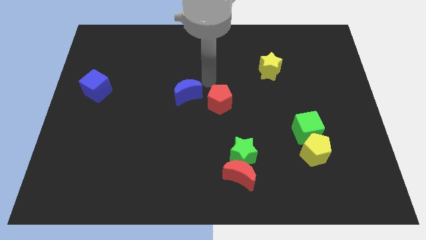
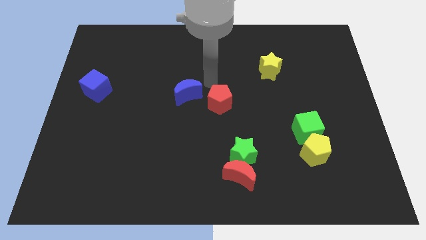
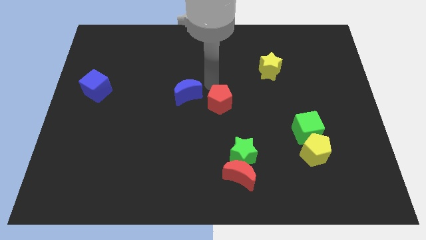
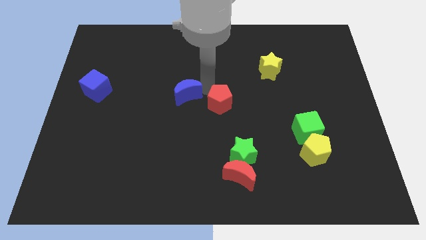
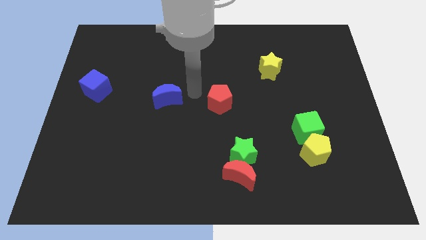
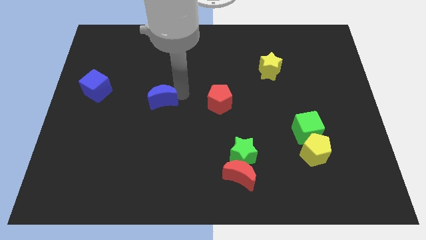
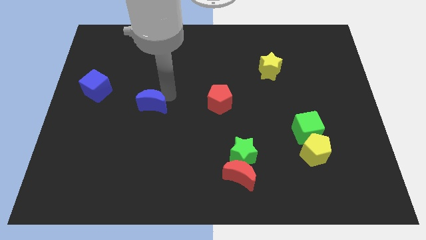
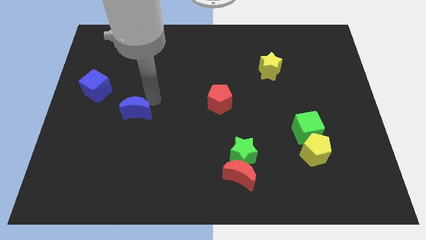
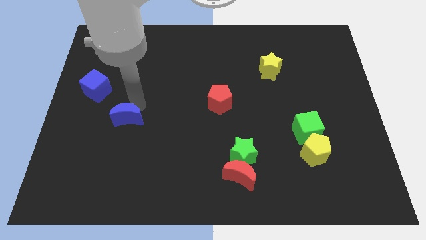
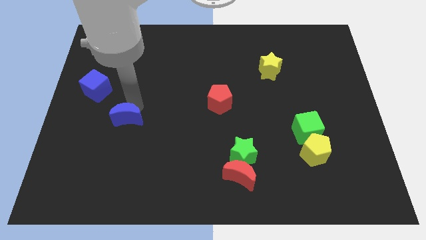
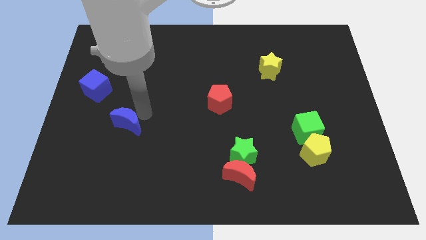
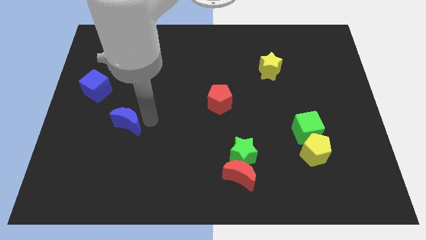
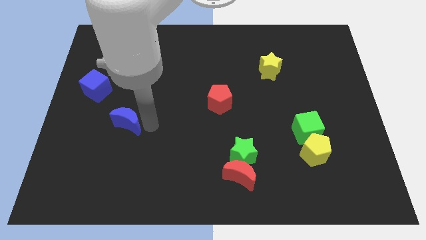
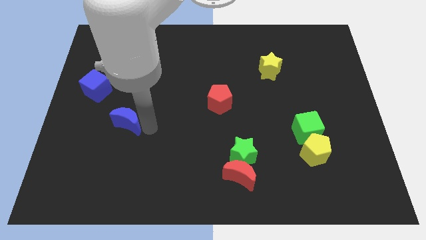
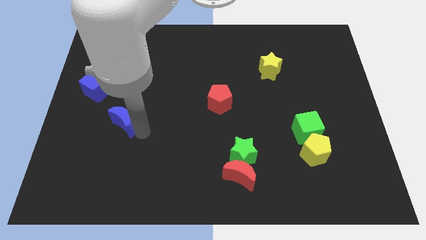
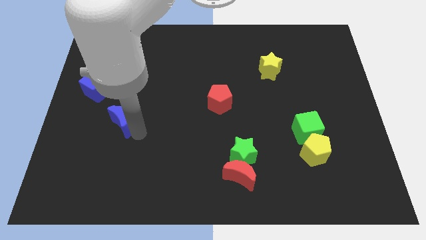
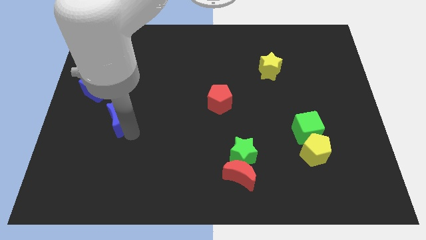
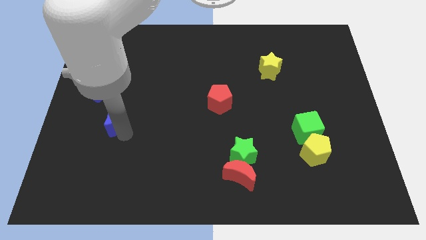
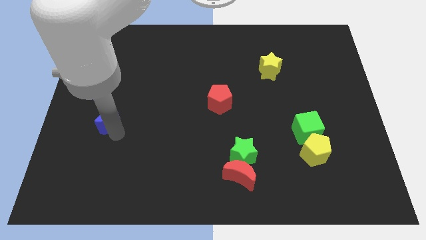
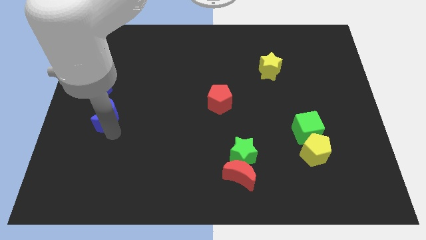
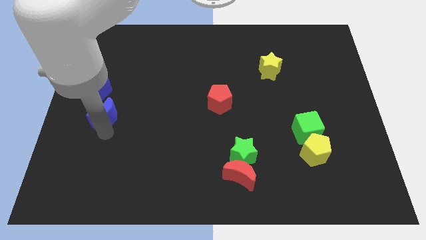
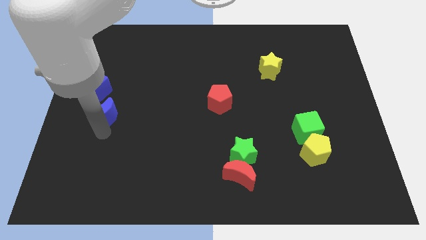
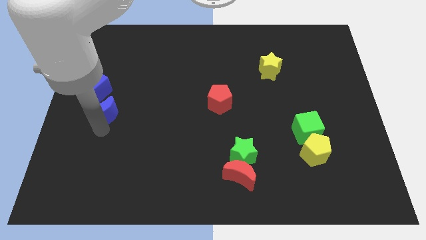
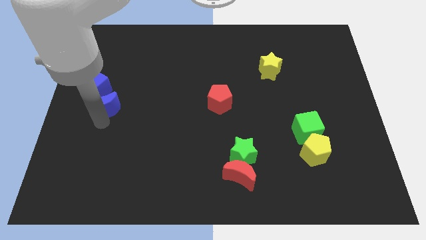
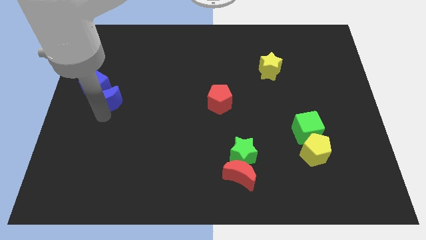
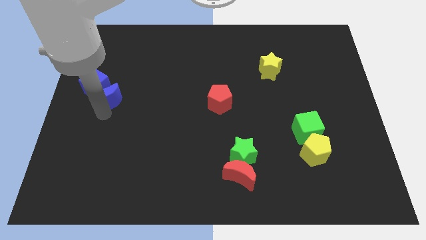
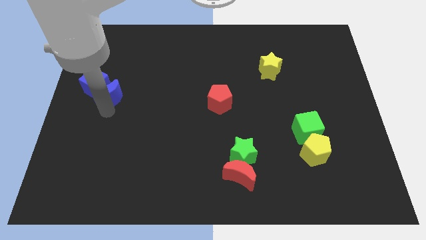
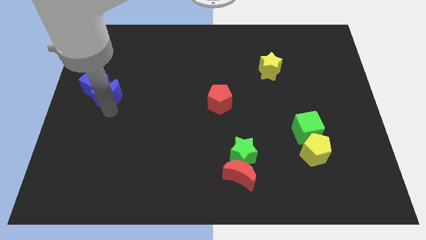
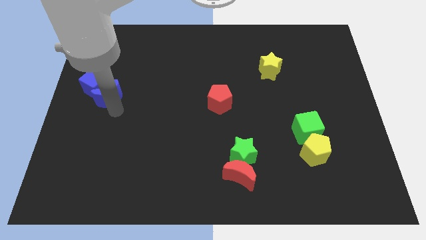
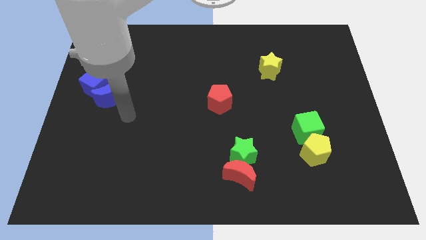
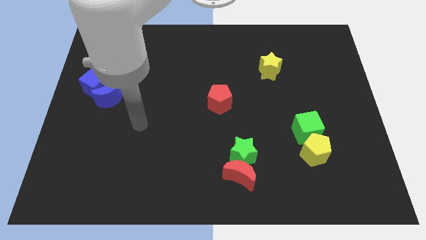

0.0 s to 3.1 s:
push the blue moon into the blue cube

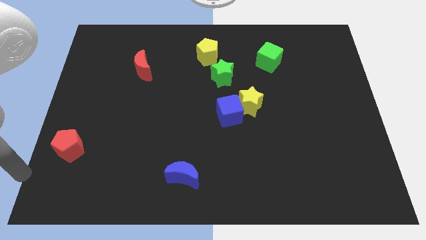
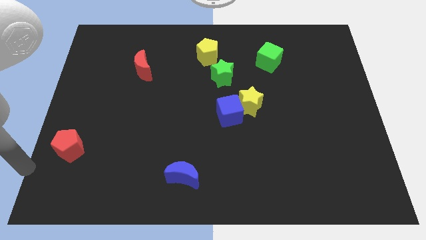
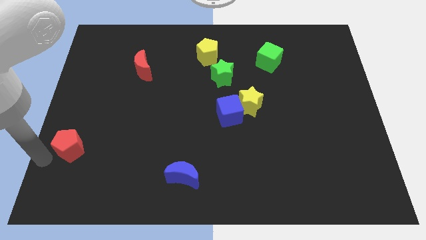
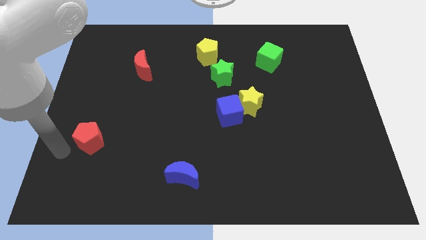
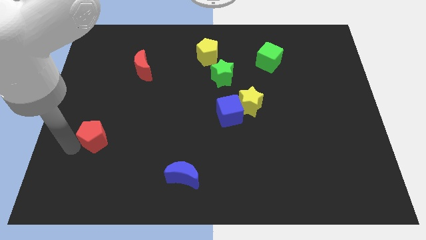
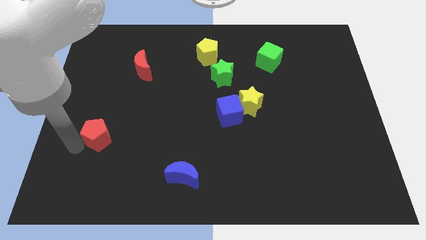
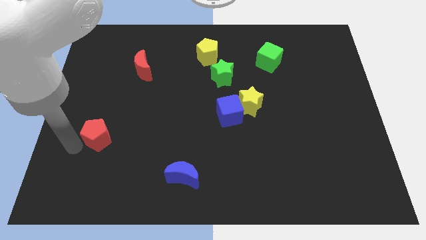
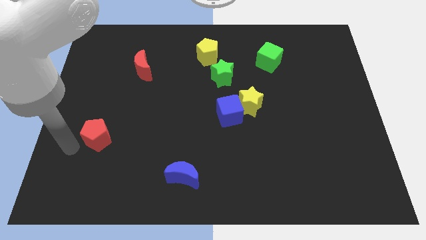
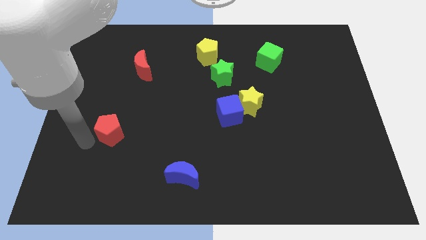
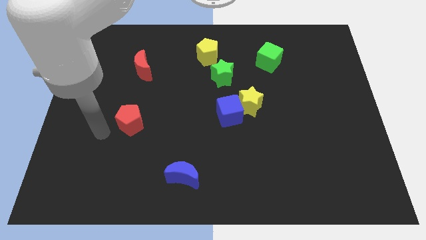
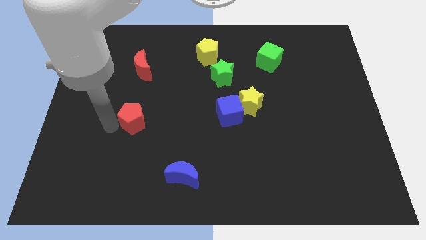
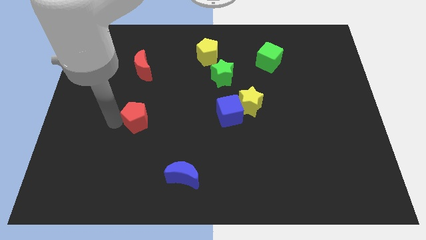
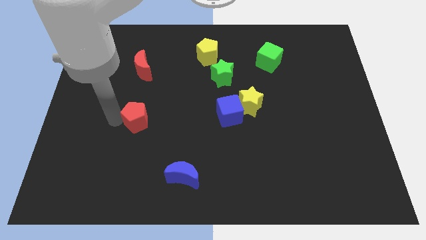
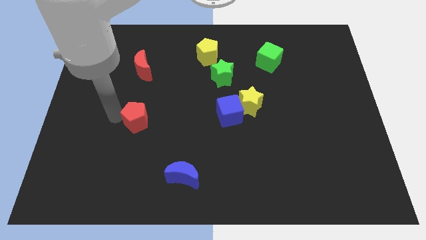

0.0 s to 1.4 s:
move the red pentagon towards the center of the board

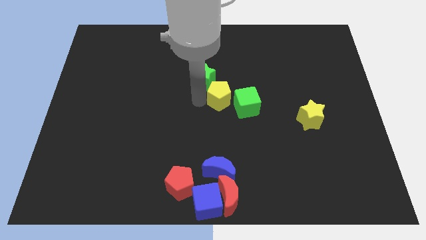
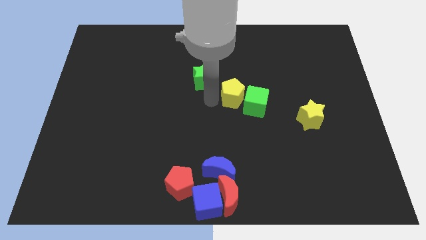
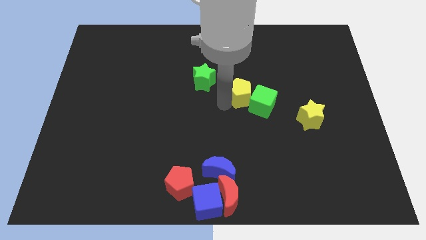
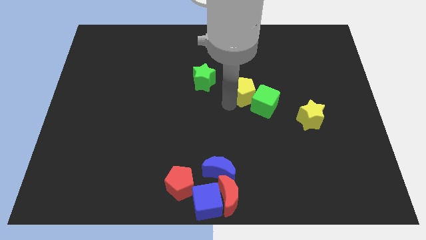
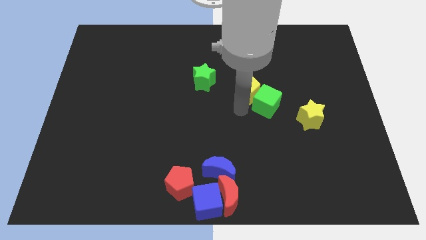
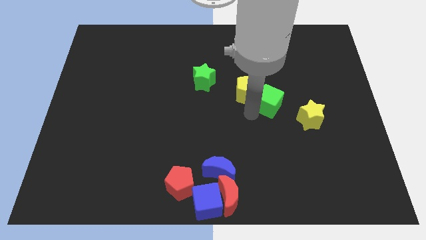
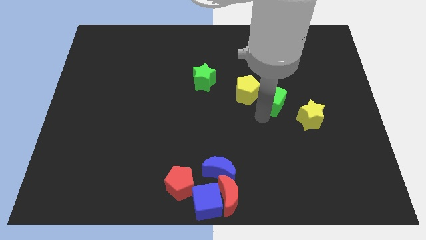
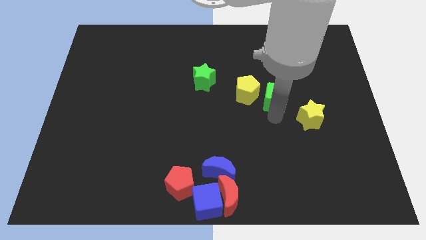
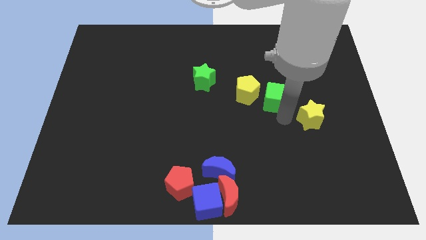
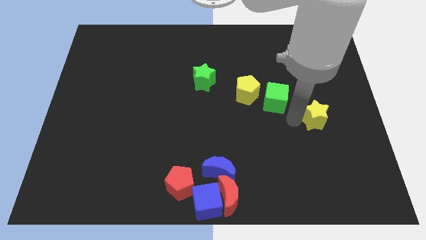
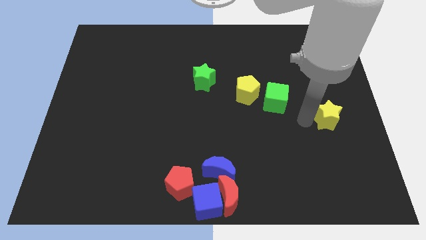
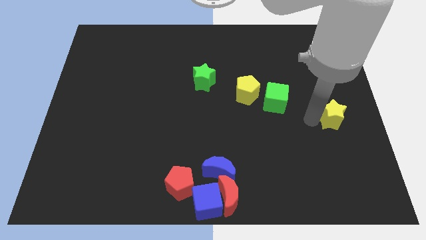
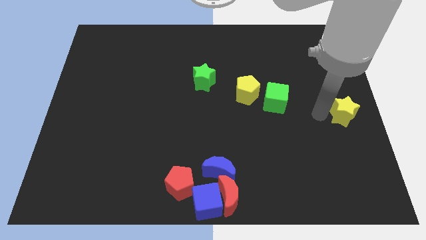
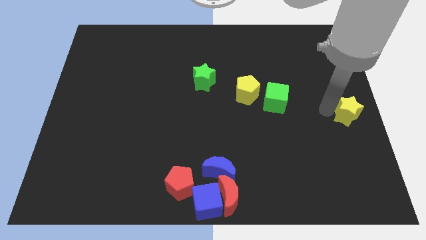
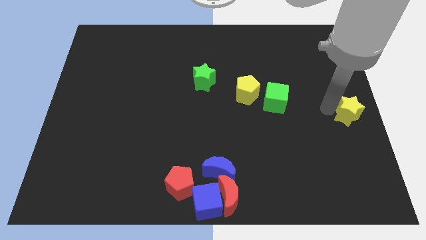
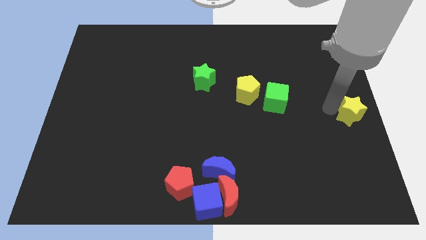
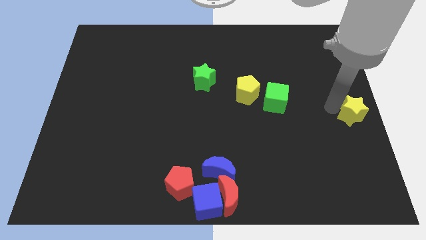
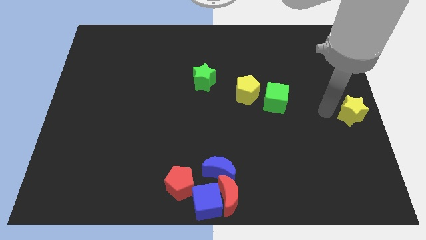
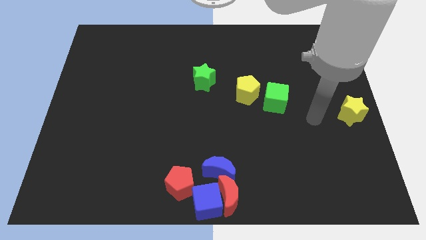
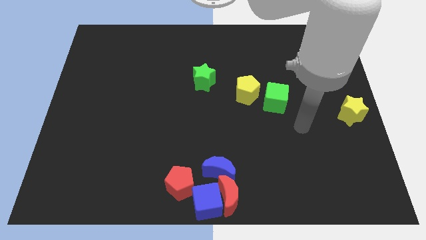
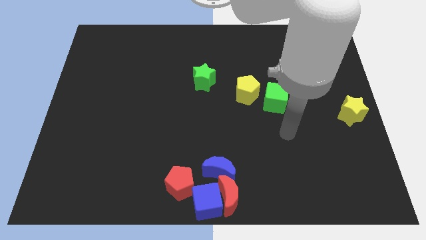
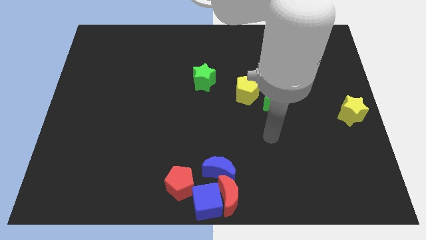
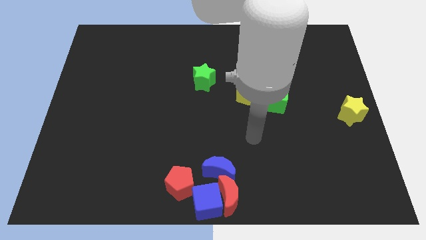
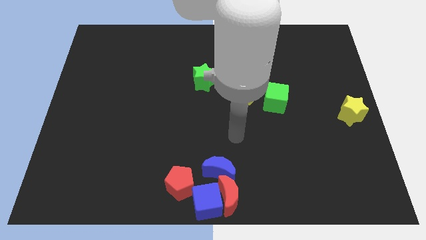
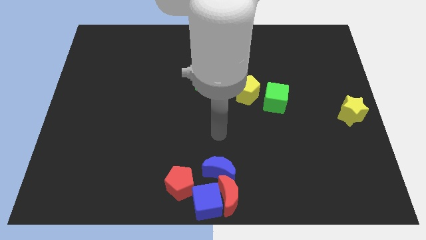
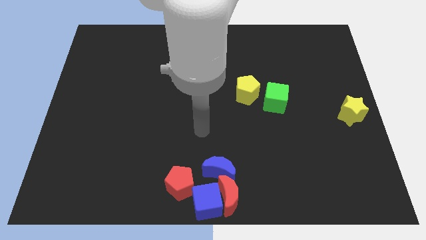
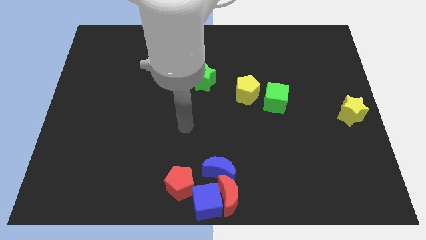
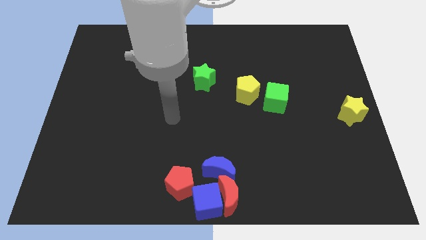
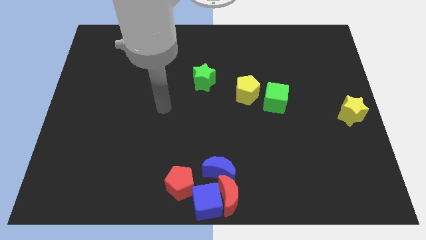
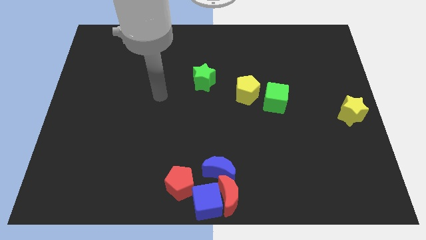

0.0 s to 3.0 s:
push the yellow star towards the right center of the board

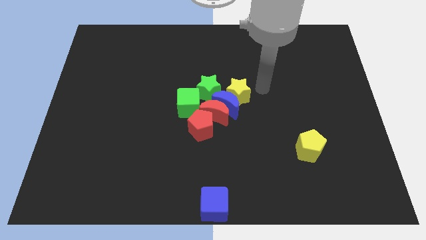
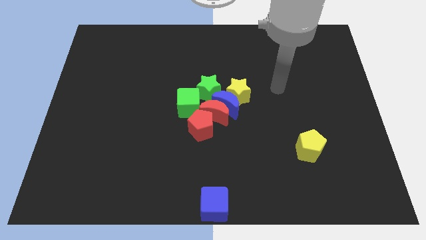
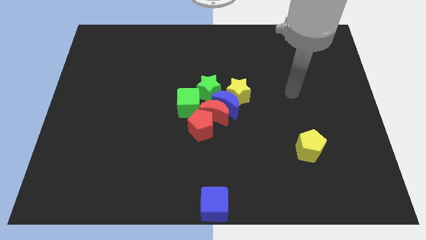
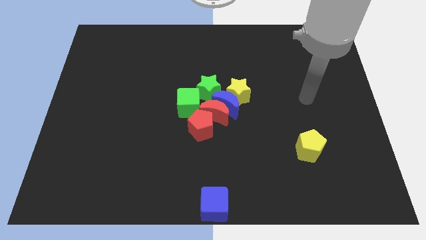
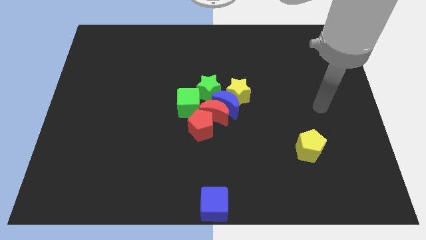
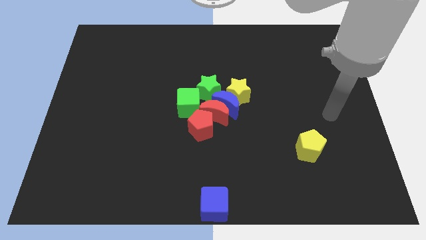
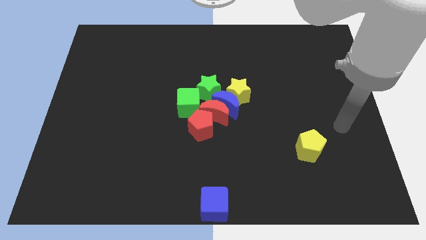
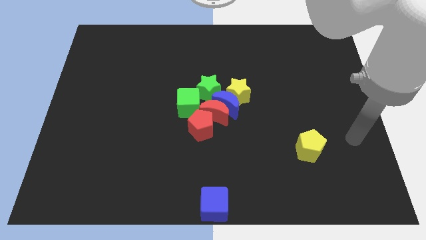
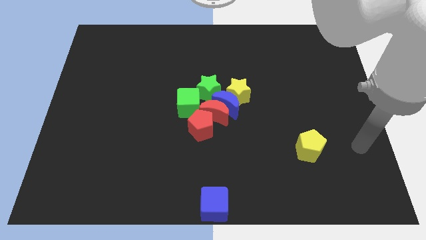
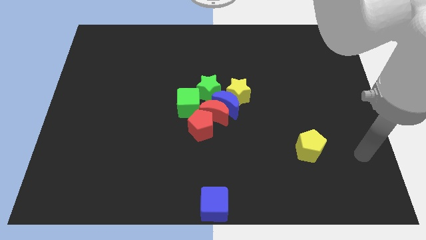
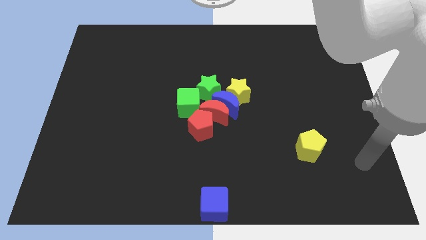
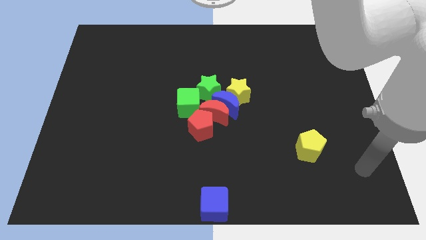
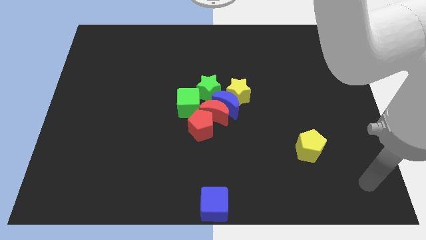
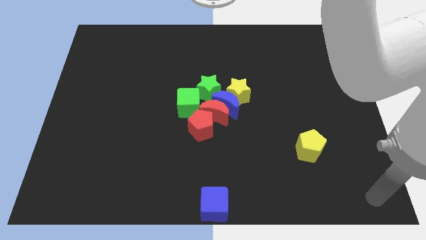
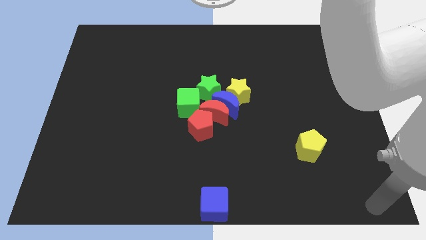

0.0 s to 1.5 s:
move your hand to the bottom right corner
